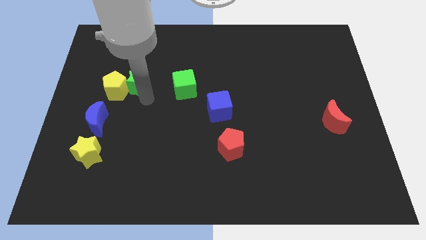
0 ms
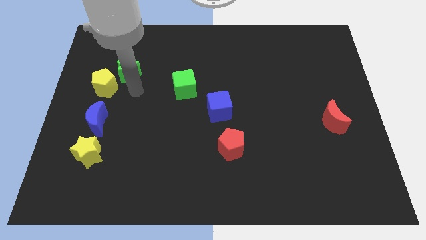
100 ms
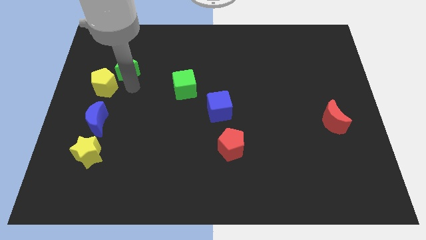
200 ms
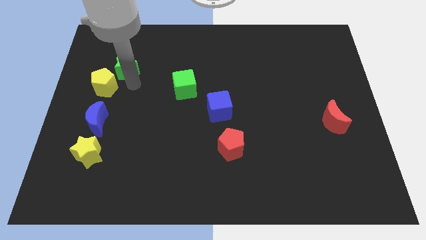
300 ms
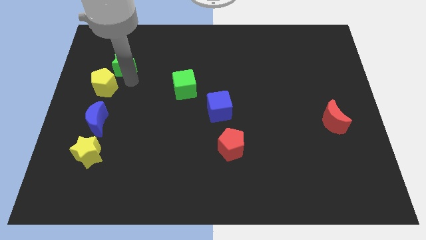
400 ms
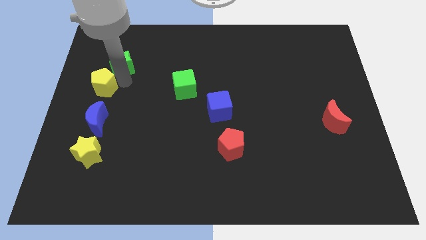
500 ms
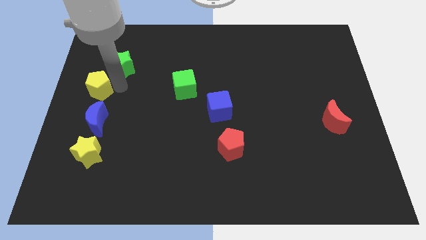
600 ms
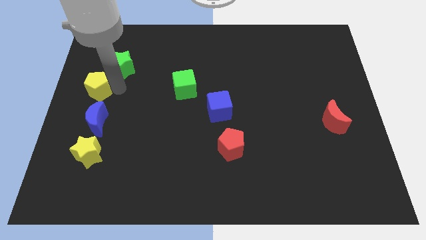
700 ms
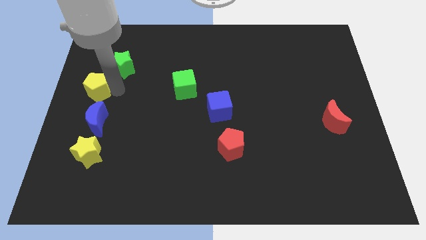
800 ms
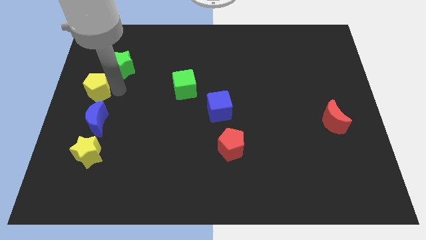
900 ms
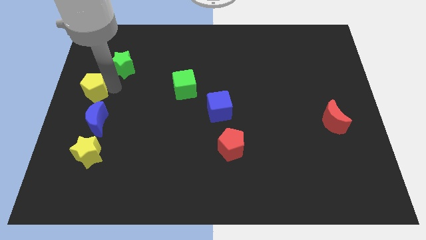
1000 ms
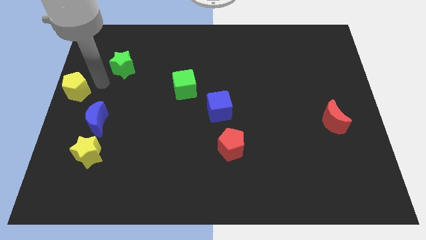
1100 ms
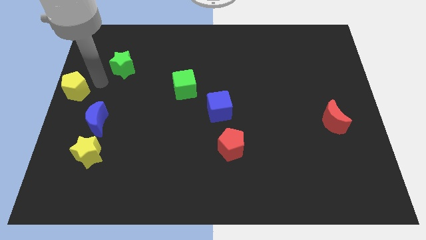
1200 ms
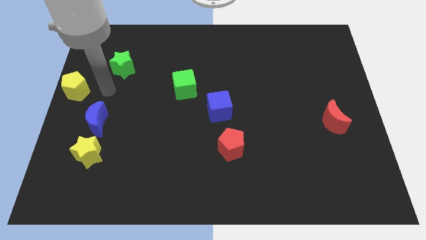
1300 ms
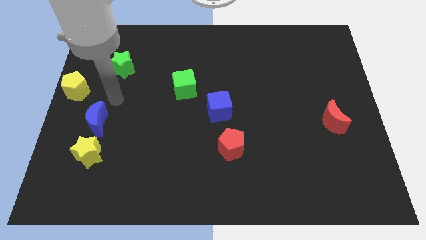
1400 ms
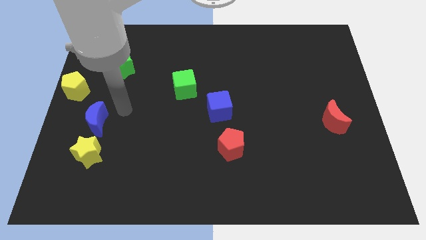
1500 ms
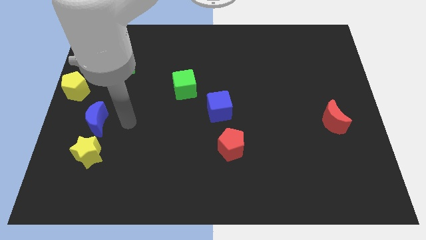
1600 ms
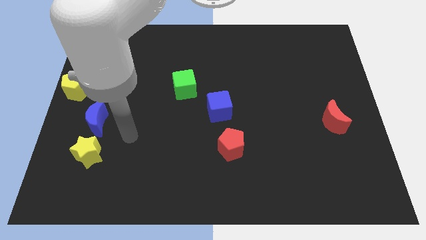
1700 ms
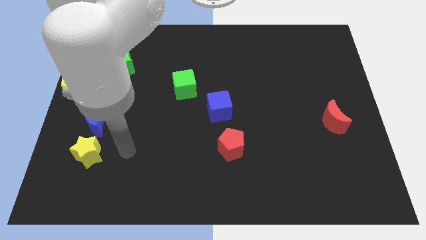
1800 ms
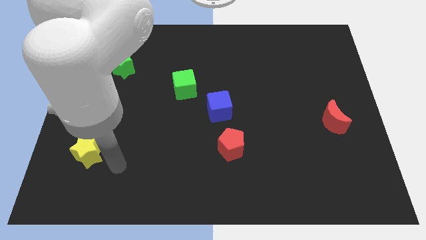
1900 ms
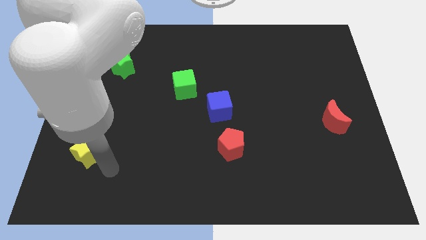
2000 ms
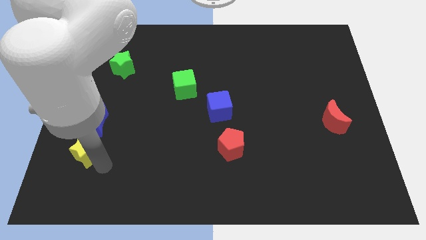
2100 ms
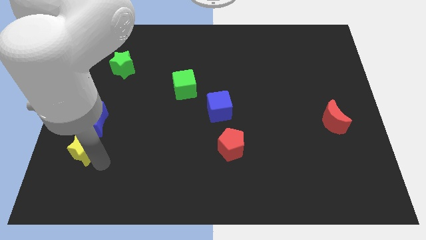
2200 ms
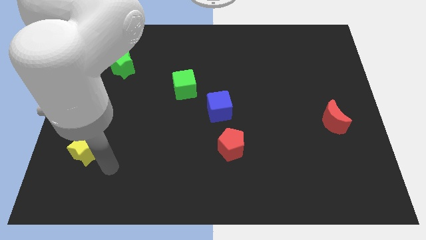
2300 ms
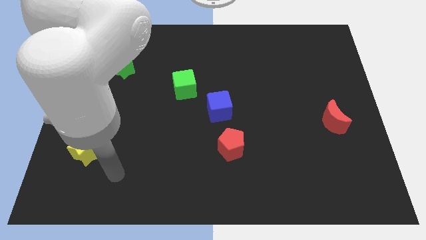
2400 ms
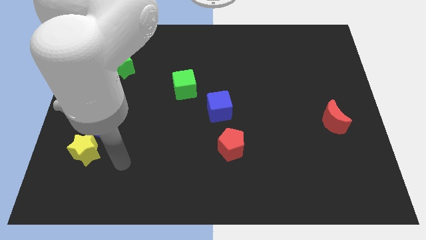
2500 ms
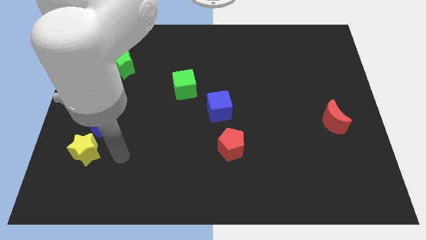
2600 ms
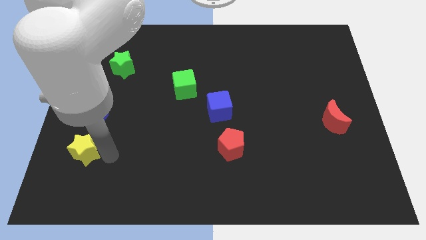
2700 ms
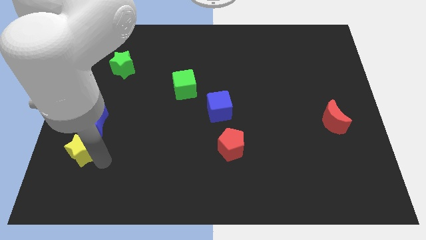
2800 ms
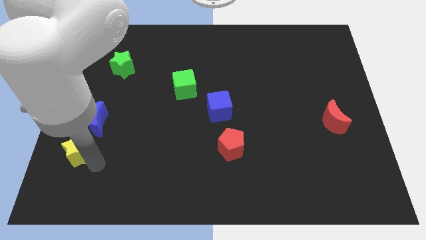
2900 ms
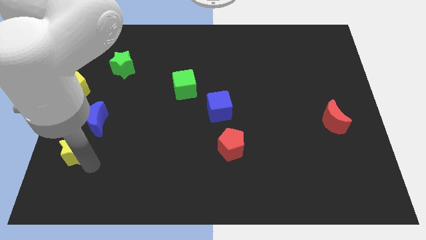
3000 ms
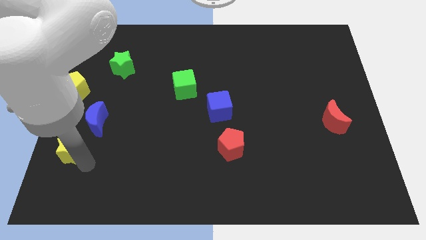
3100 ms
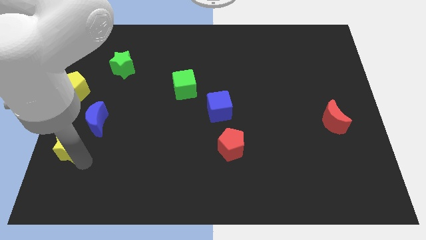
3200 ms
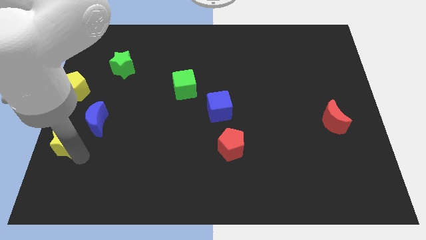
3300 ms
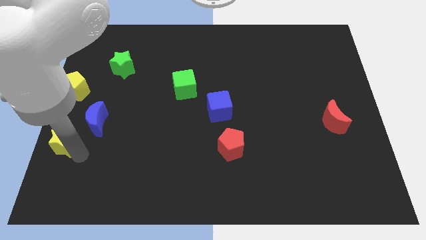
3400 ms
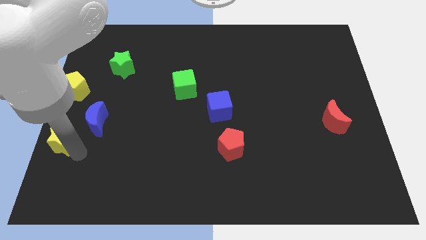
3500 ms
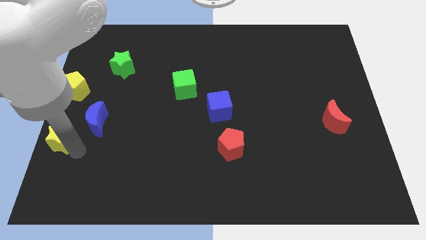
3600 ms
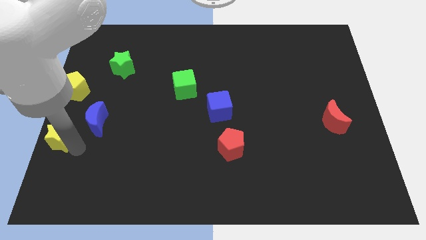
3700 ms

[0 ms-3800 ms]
push the yellow pentagon and yellow star towards the left side of the board

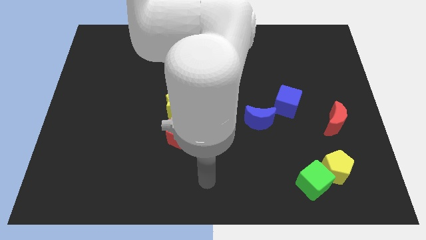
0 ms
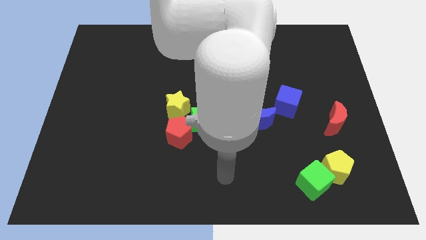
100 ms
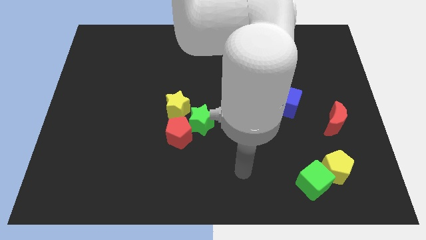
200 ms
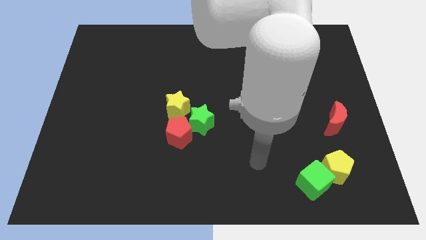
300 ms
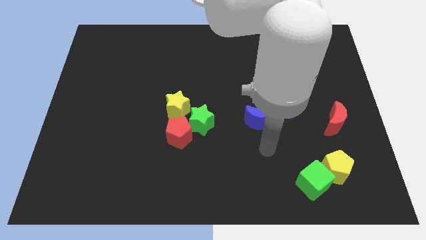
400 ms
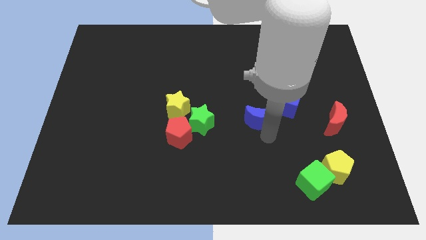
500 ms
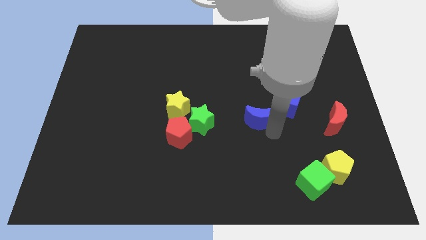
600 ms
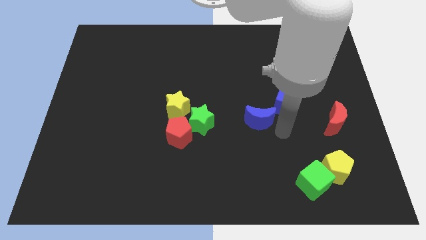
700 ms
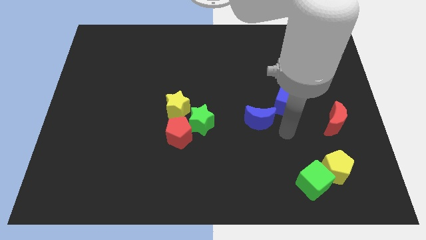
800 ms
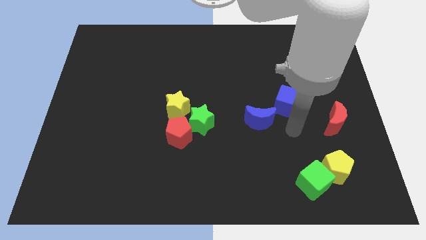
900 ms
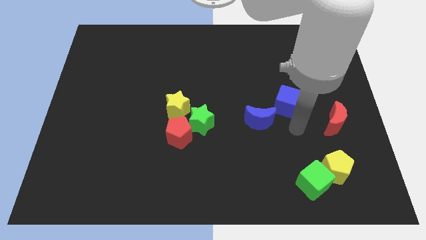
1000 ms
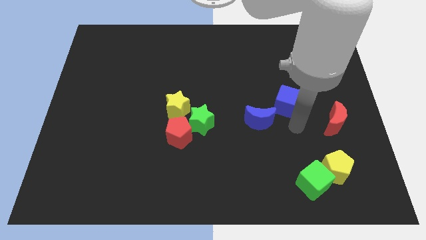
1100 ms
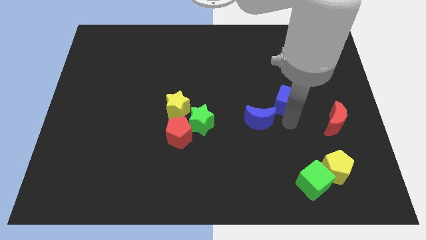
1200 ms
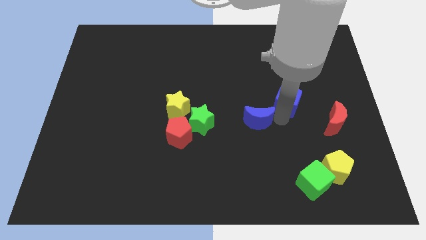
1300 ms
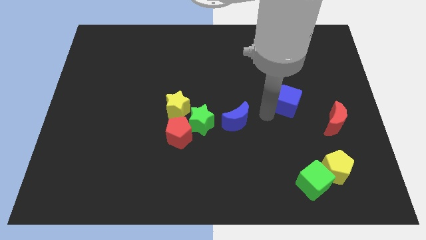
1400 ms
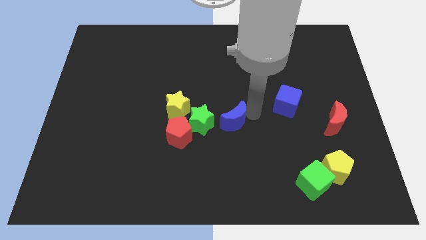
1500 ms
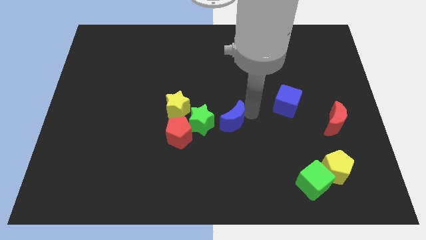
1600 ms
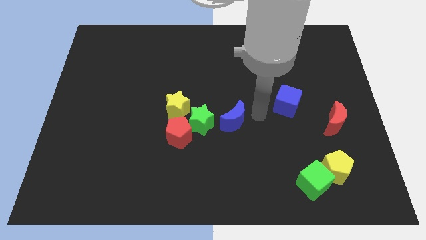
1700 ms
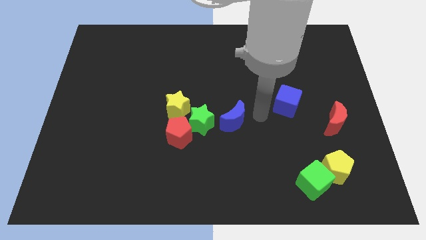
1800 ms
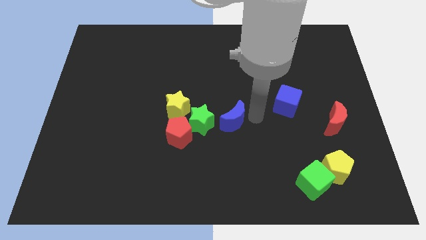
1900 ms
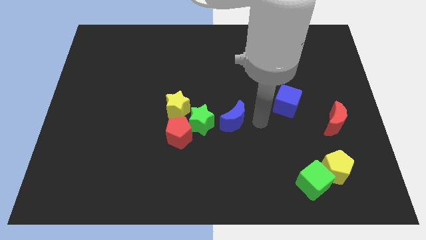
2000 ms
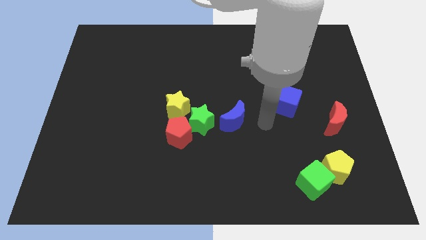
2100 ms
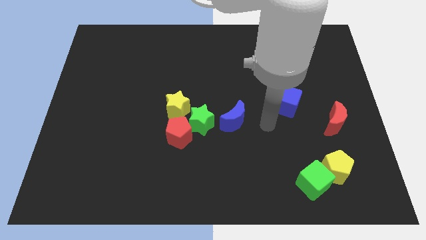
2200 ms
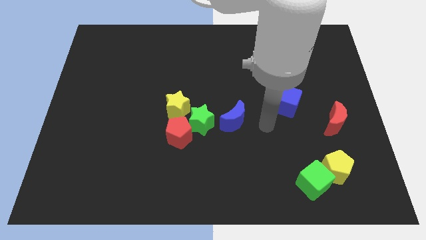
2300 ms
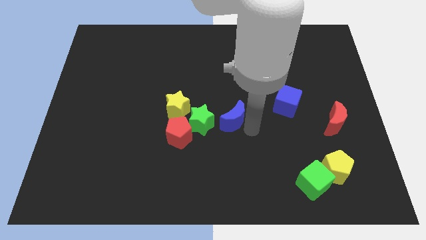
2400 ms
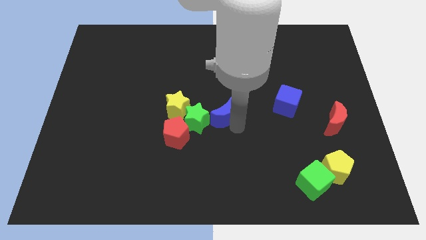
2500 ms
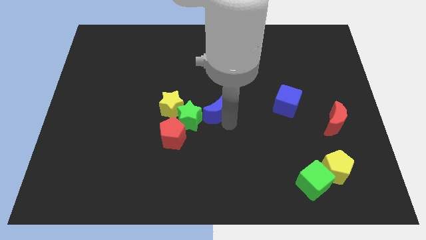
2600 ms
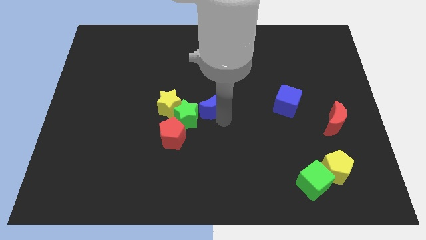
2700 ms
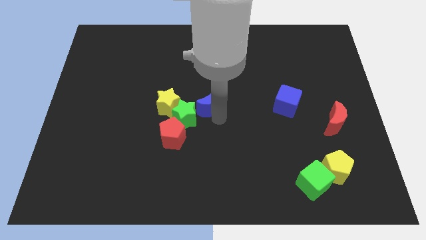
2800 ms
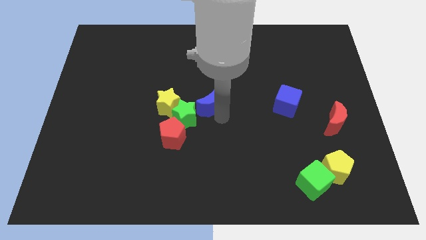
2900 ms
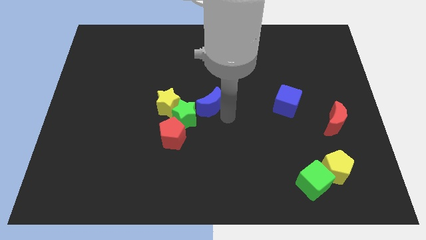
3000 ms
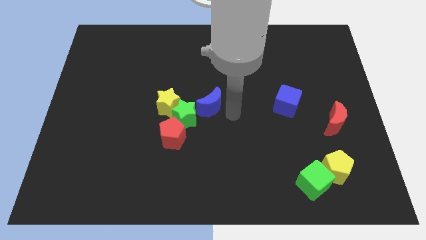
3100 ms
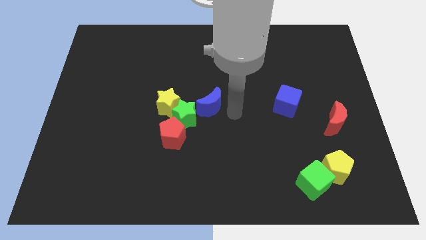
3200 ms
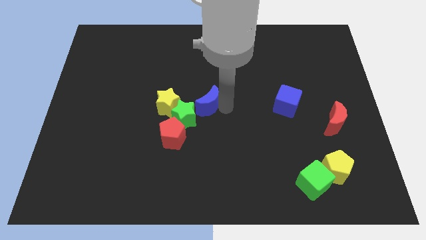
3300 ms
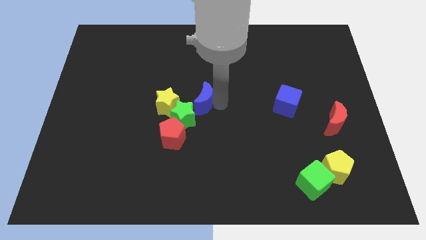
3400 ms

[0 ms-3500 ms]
move the blue moon to the top right side of the green star

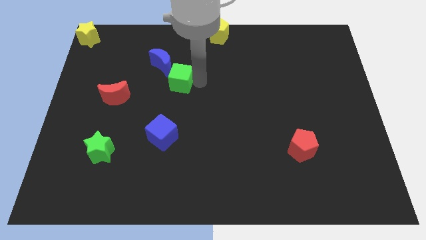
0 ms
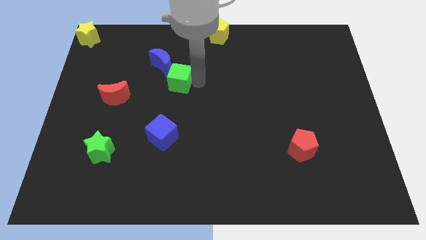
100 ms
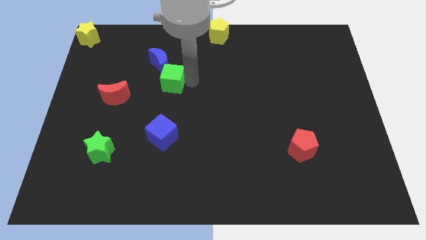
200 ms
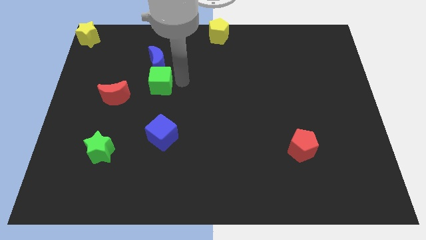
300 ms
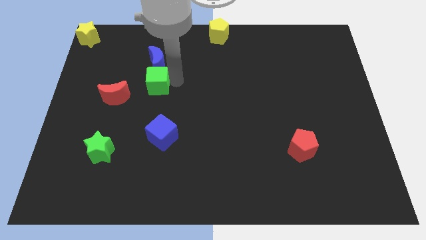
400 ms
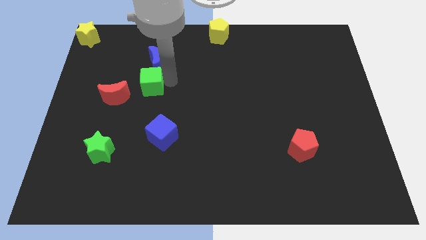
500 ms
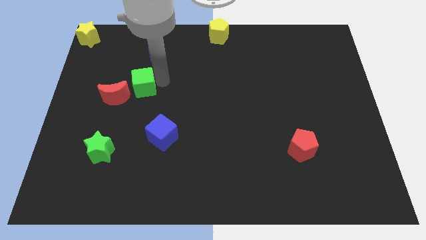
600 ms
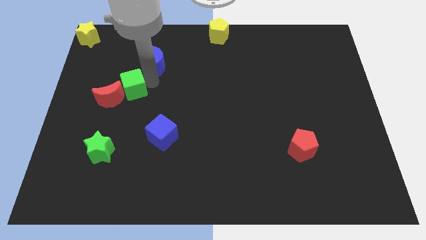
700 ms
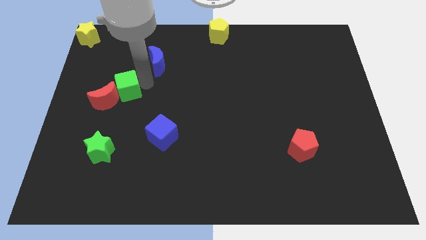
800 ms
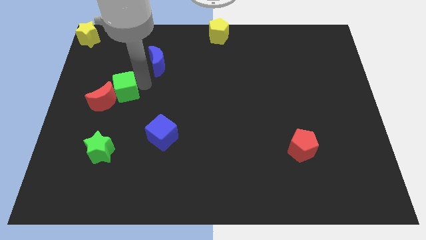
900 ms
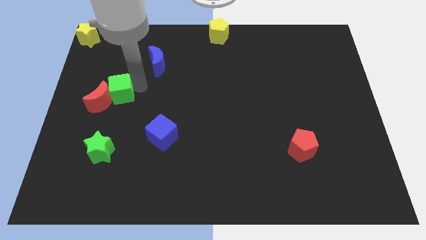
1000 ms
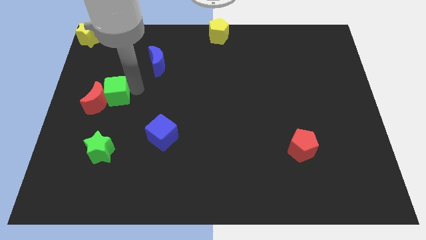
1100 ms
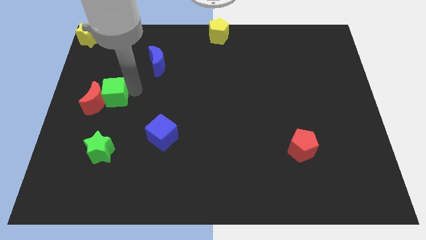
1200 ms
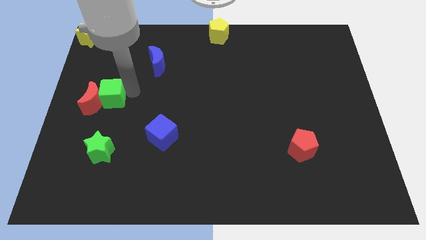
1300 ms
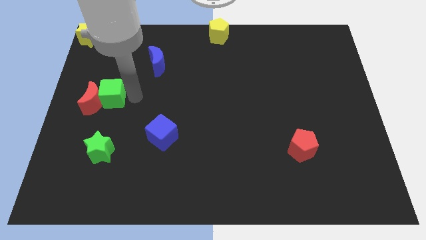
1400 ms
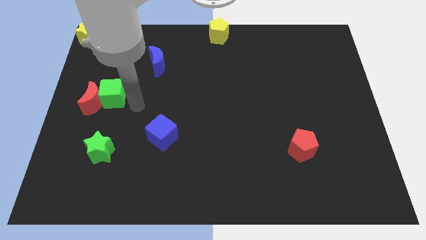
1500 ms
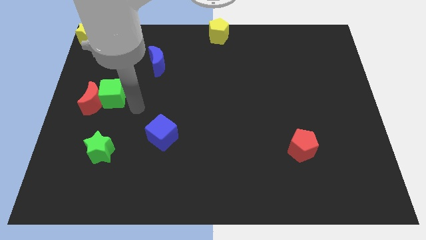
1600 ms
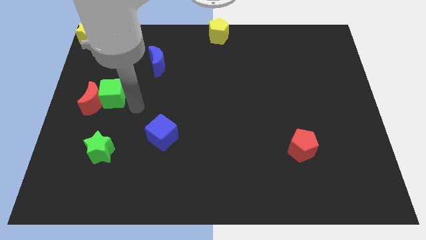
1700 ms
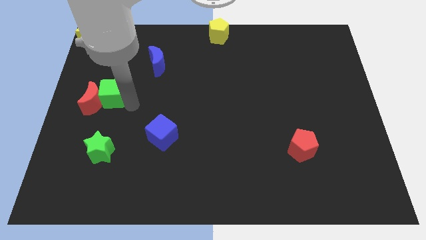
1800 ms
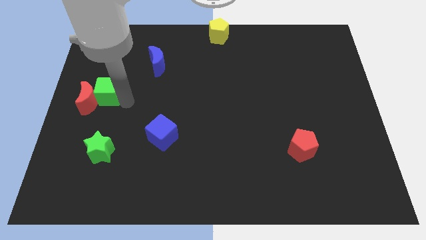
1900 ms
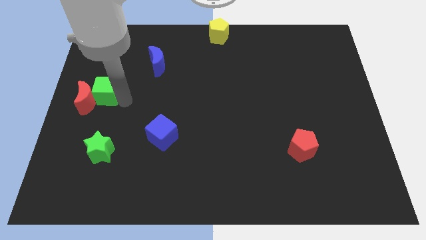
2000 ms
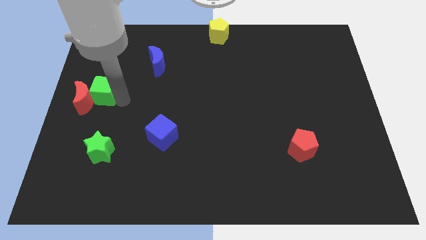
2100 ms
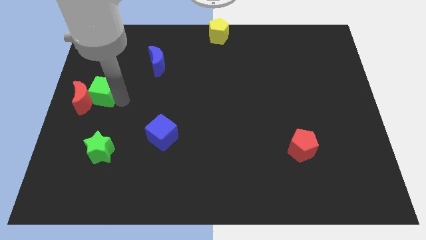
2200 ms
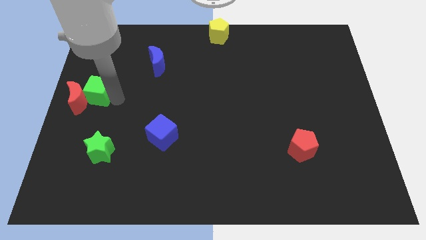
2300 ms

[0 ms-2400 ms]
push the green cube into the red moon
